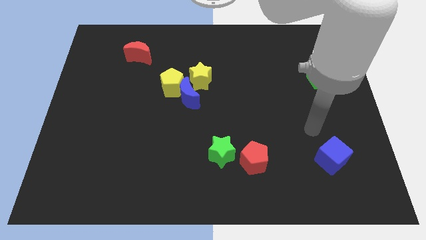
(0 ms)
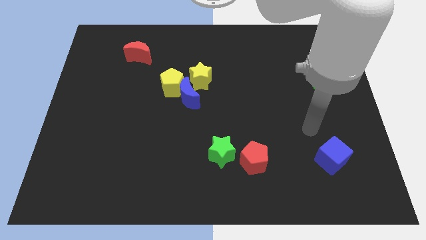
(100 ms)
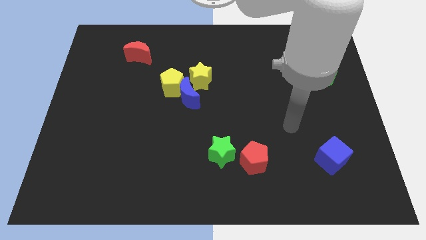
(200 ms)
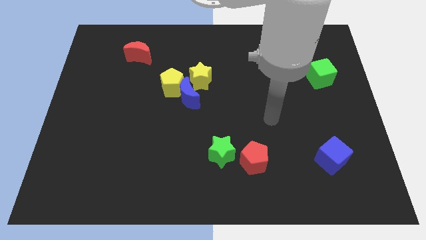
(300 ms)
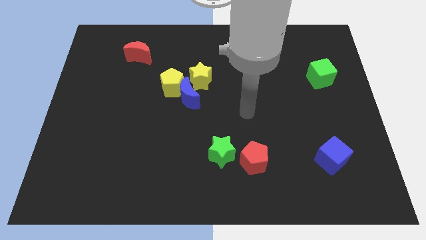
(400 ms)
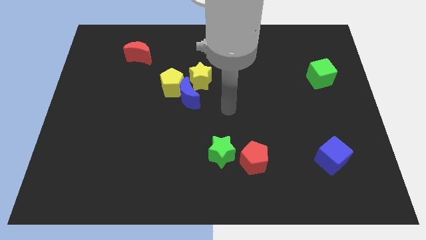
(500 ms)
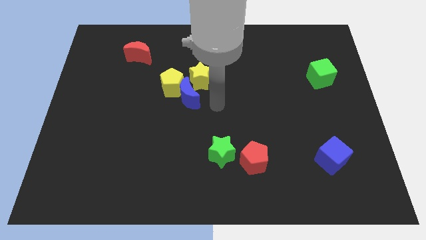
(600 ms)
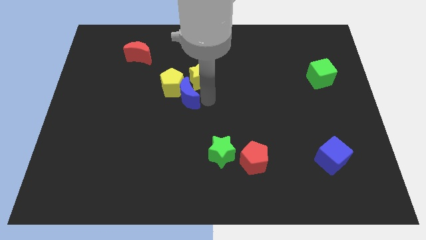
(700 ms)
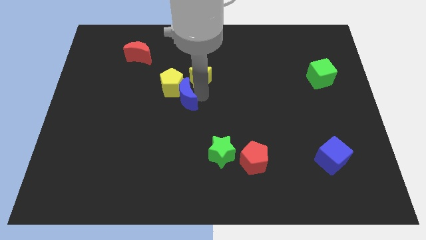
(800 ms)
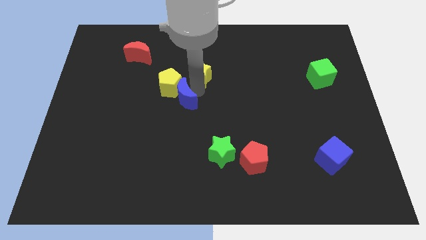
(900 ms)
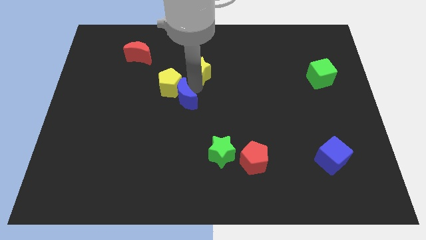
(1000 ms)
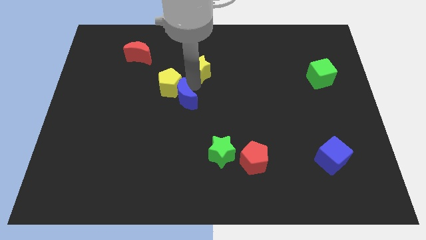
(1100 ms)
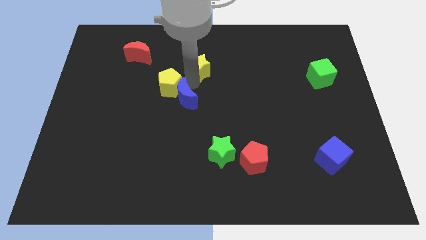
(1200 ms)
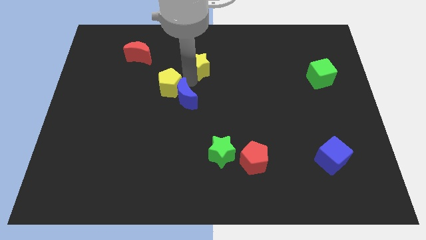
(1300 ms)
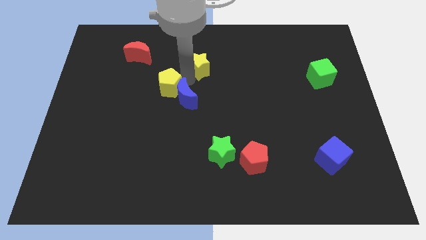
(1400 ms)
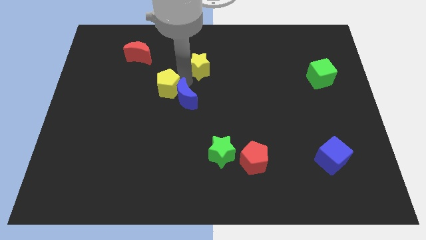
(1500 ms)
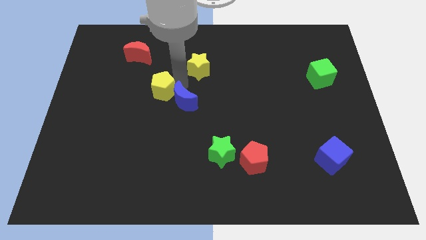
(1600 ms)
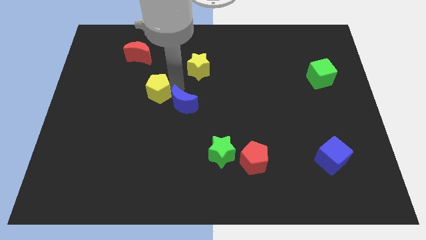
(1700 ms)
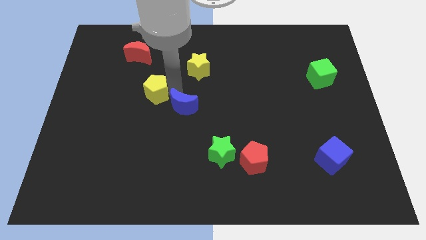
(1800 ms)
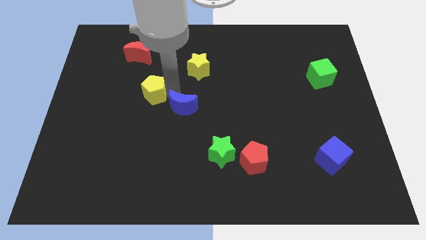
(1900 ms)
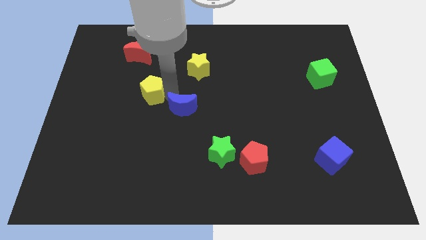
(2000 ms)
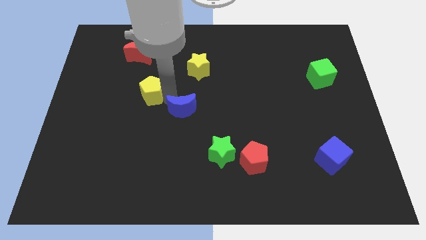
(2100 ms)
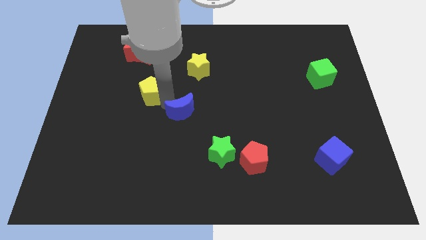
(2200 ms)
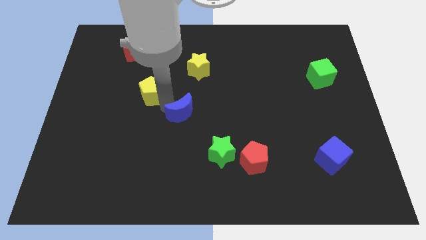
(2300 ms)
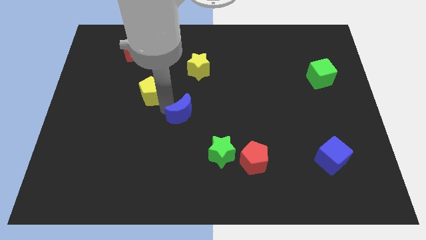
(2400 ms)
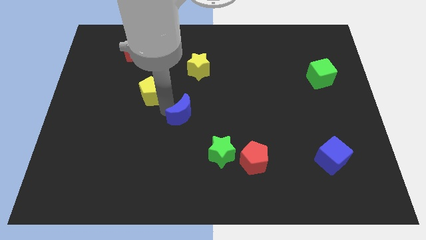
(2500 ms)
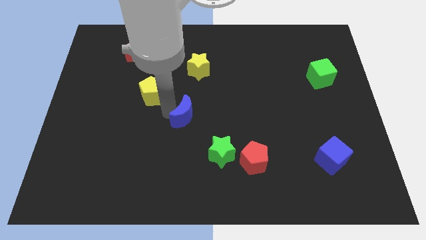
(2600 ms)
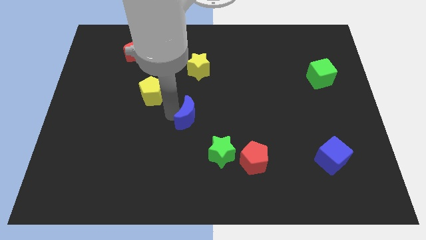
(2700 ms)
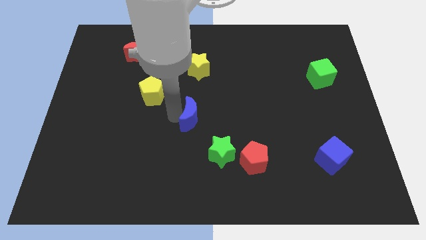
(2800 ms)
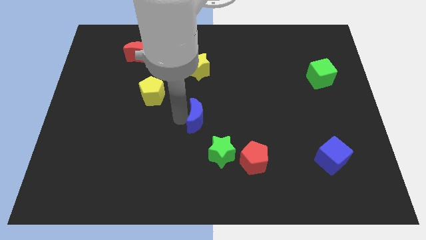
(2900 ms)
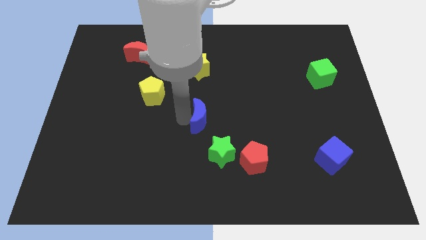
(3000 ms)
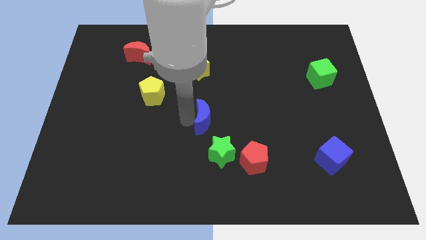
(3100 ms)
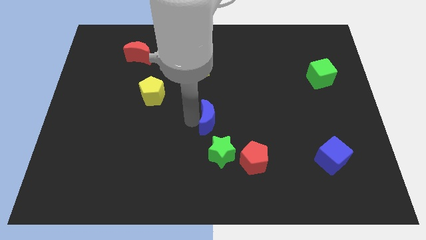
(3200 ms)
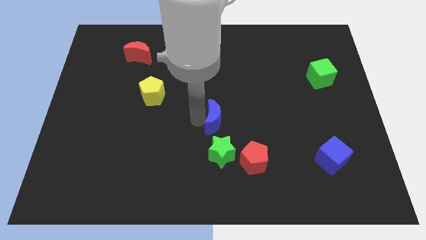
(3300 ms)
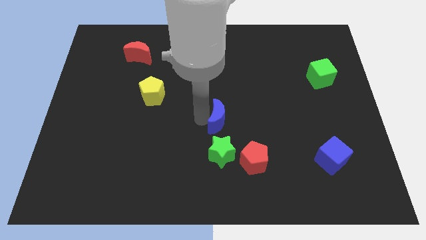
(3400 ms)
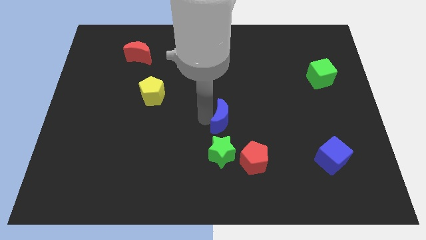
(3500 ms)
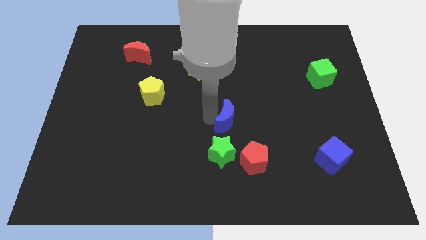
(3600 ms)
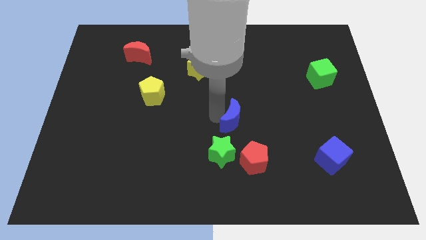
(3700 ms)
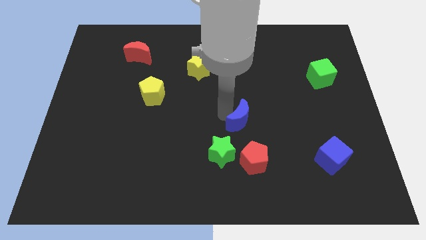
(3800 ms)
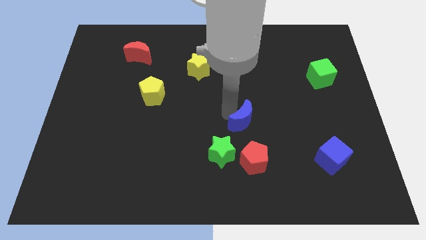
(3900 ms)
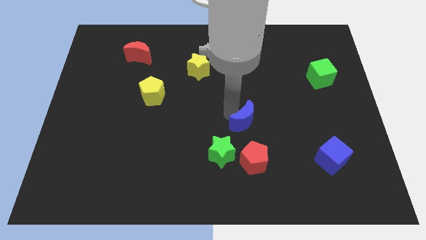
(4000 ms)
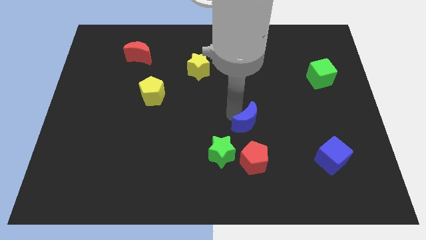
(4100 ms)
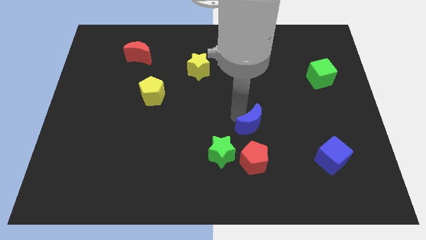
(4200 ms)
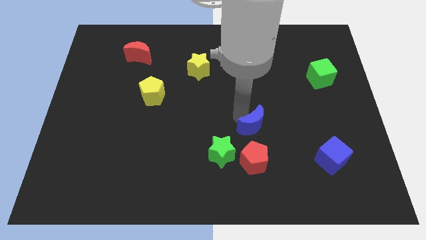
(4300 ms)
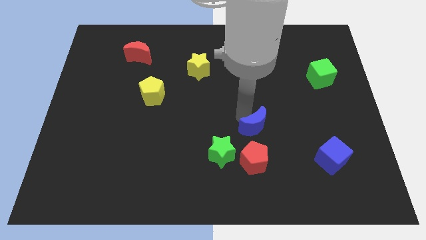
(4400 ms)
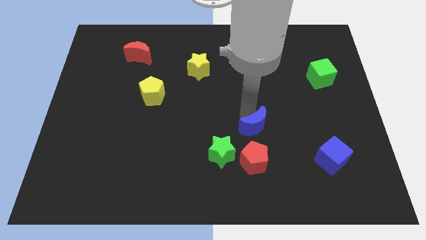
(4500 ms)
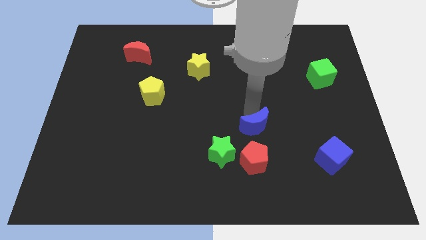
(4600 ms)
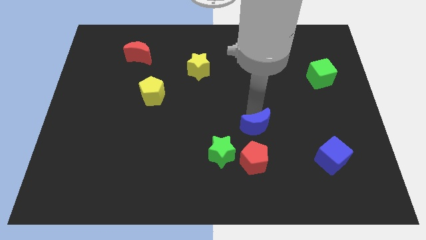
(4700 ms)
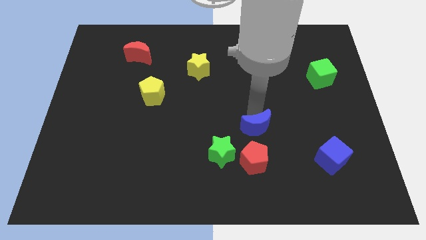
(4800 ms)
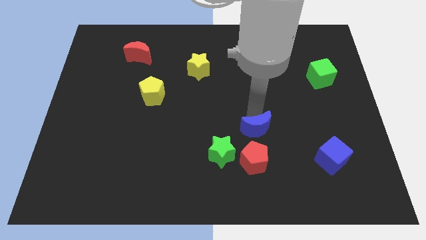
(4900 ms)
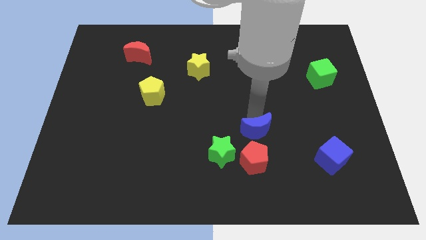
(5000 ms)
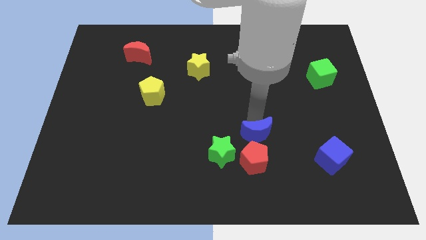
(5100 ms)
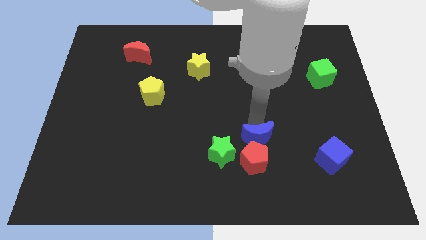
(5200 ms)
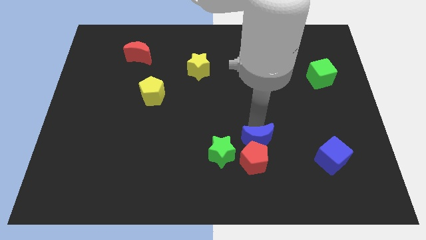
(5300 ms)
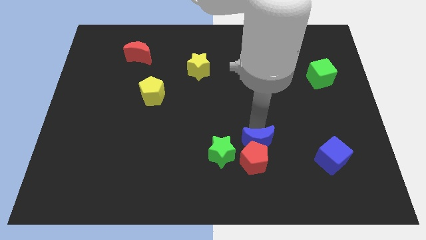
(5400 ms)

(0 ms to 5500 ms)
push the blue moon next to the red pentagon

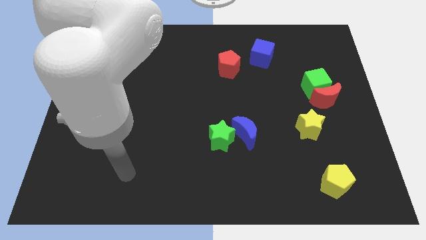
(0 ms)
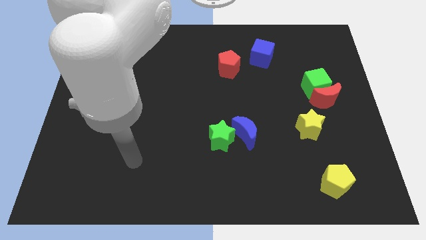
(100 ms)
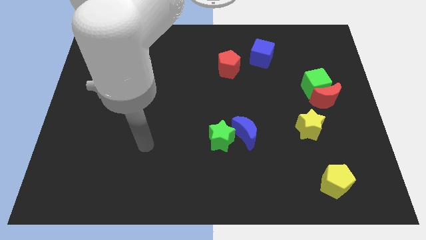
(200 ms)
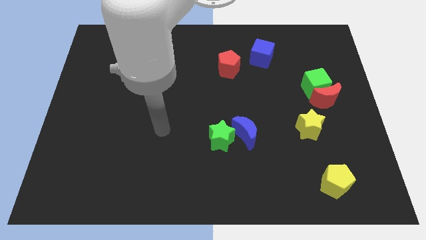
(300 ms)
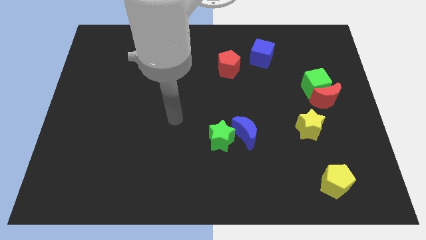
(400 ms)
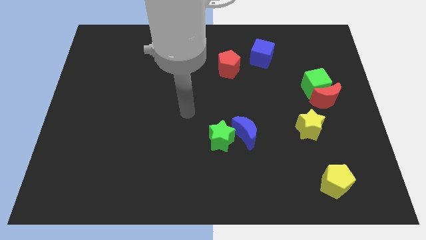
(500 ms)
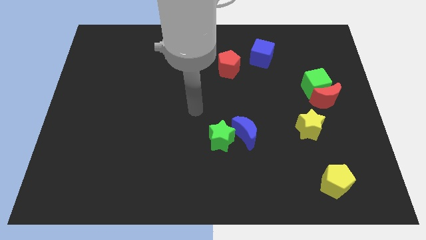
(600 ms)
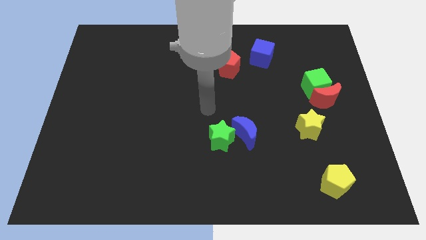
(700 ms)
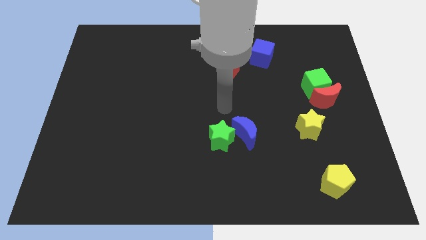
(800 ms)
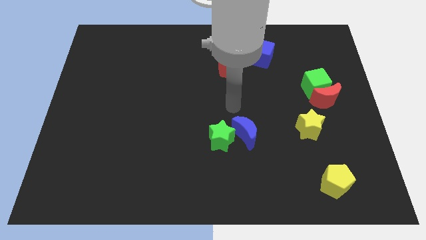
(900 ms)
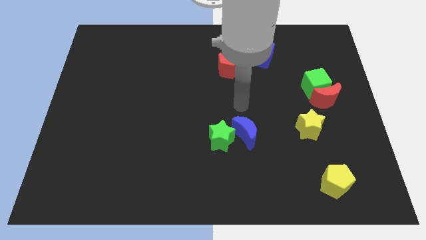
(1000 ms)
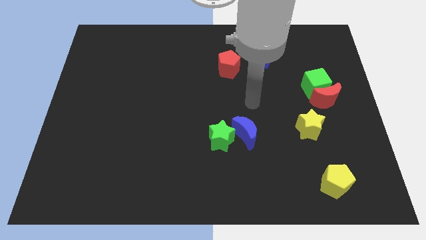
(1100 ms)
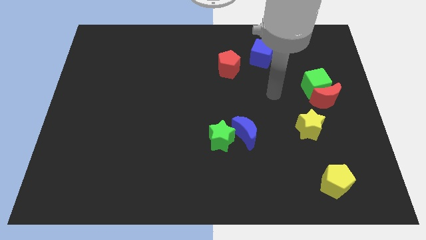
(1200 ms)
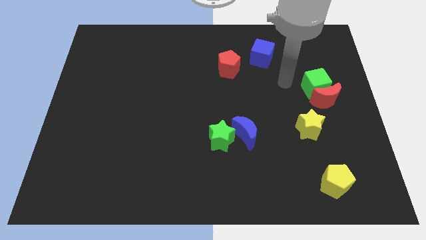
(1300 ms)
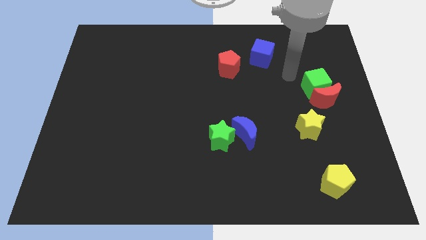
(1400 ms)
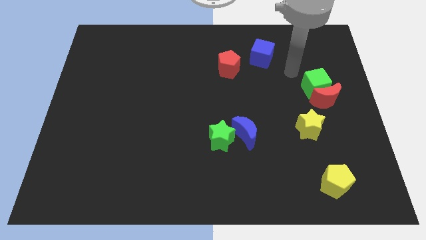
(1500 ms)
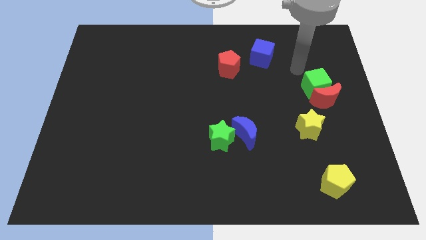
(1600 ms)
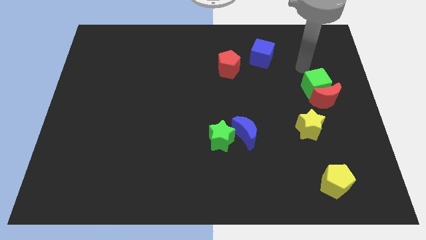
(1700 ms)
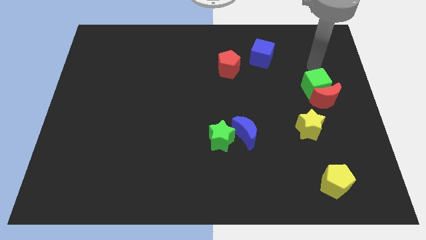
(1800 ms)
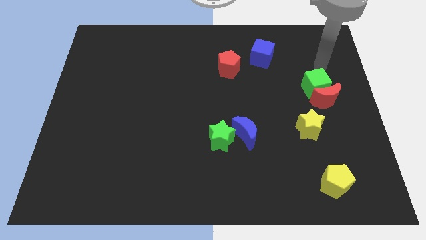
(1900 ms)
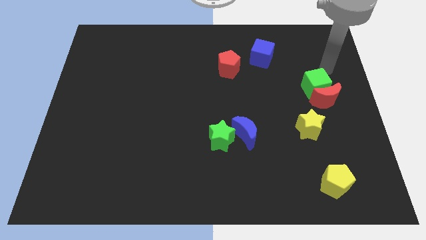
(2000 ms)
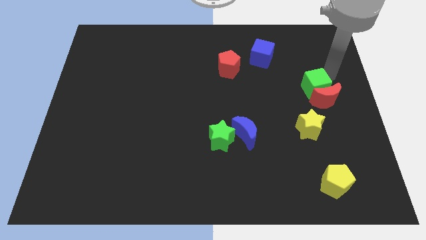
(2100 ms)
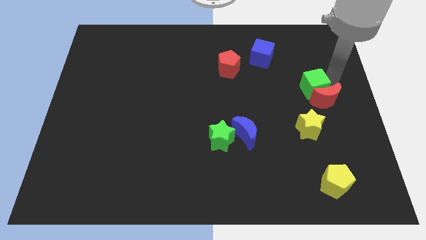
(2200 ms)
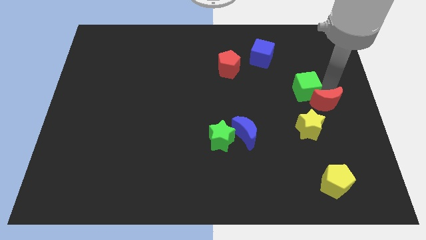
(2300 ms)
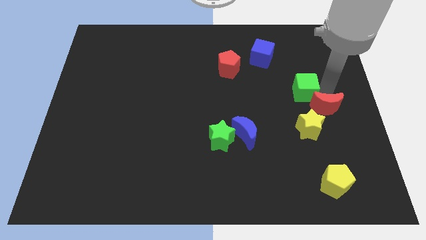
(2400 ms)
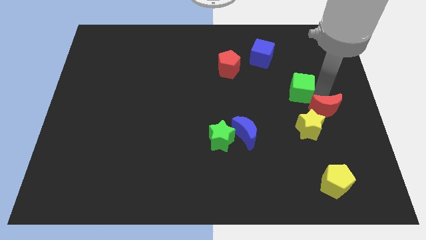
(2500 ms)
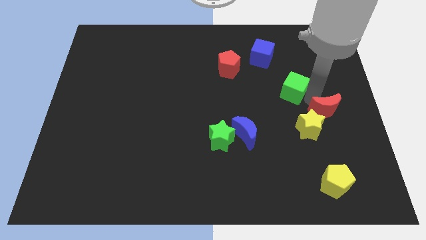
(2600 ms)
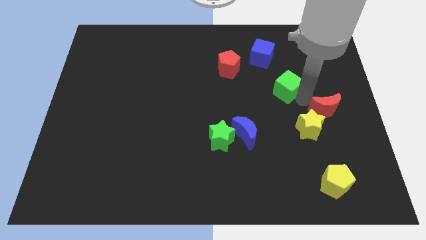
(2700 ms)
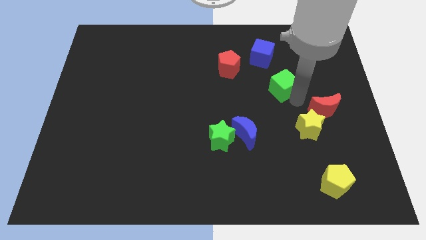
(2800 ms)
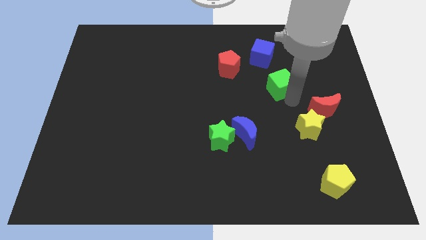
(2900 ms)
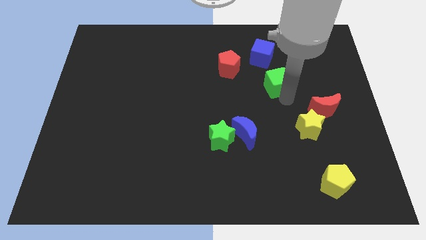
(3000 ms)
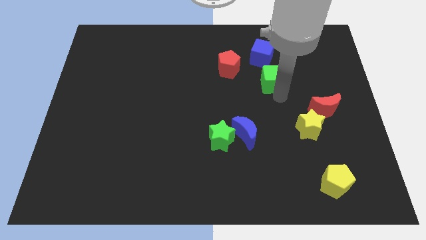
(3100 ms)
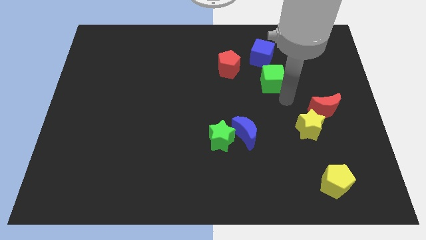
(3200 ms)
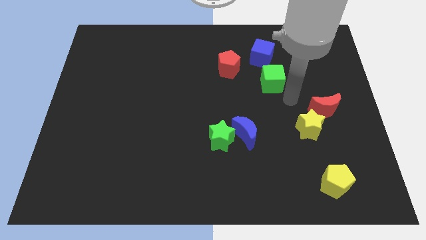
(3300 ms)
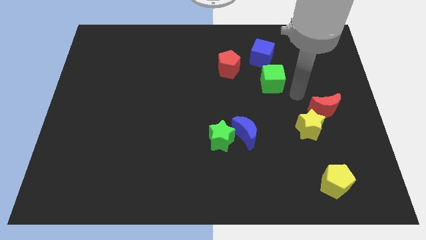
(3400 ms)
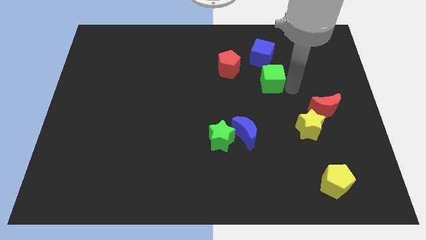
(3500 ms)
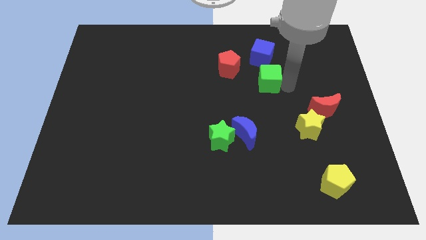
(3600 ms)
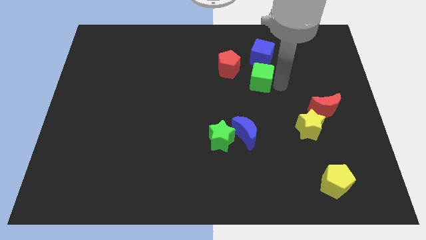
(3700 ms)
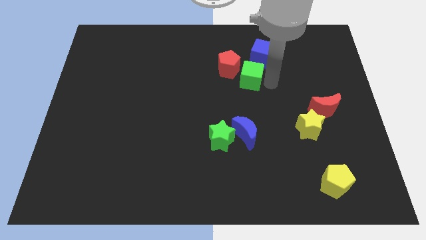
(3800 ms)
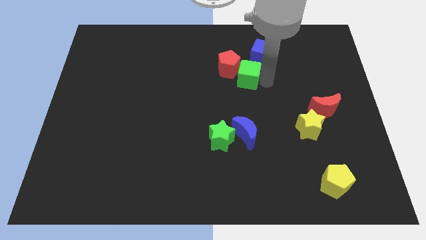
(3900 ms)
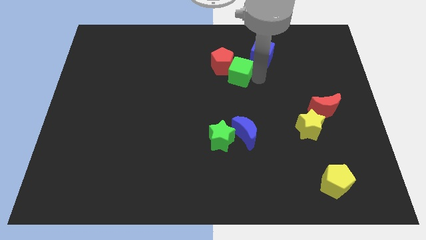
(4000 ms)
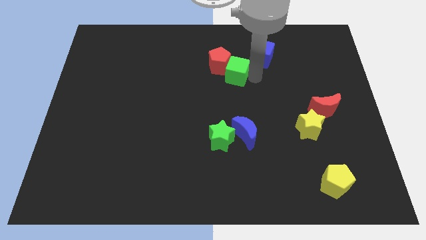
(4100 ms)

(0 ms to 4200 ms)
put the green cube to the red pentagon
